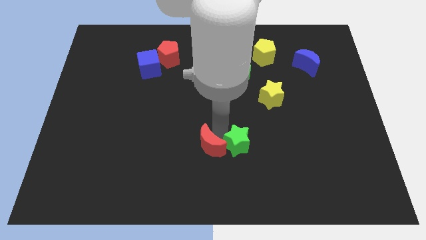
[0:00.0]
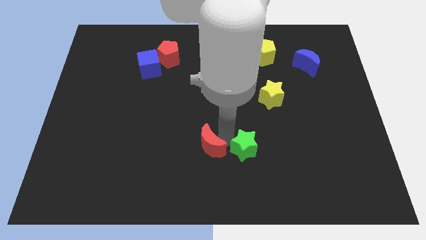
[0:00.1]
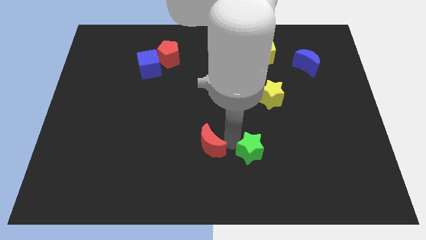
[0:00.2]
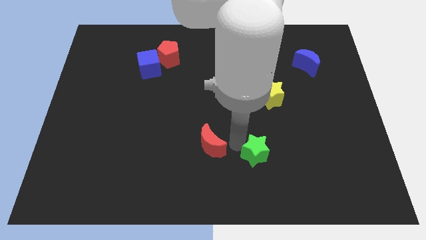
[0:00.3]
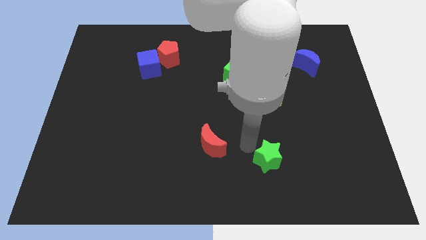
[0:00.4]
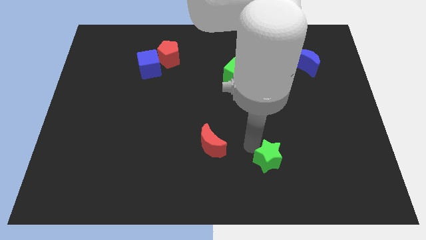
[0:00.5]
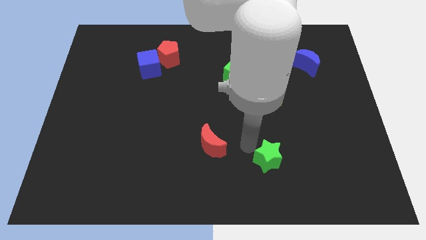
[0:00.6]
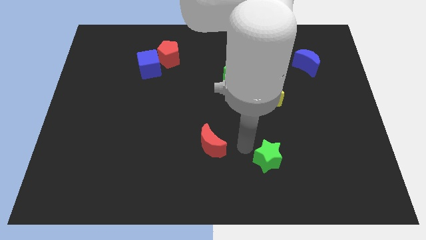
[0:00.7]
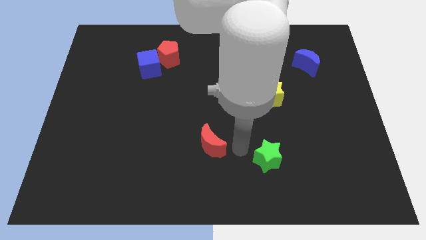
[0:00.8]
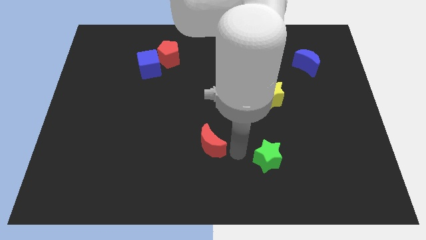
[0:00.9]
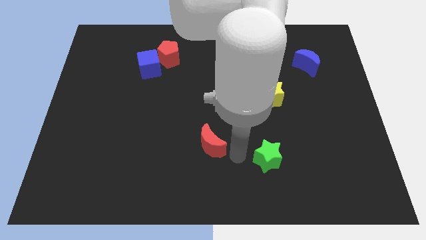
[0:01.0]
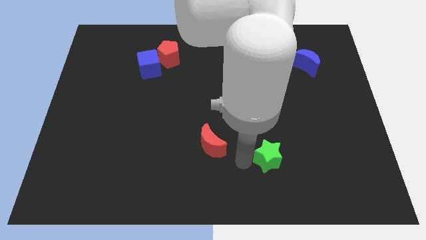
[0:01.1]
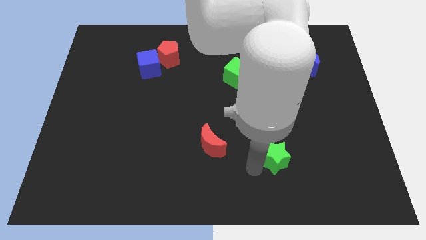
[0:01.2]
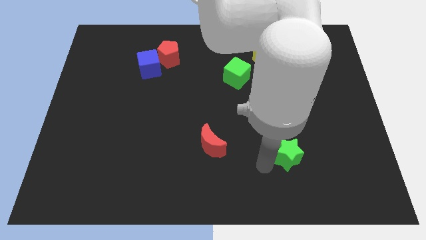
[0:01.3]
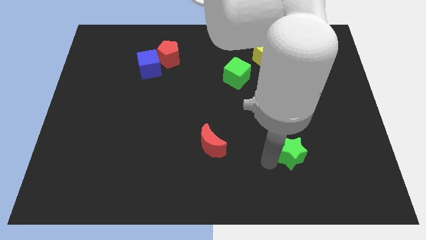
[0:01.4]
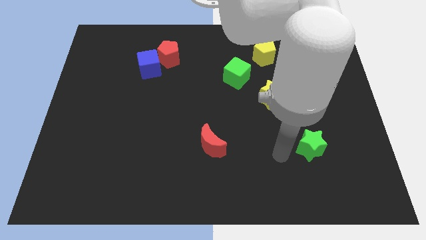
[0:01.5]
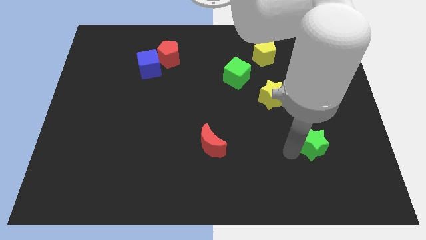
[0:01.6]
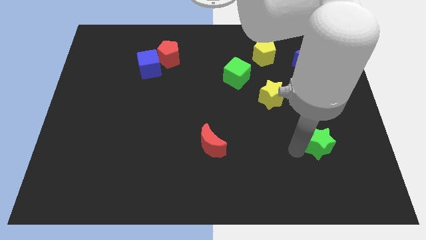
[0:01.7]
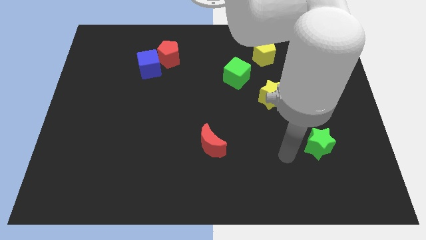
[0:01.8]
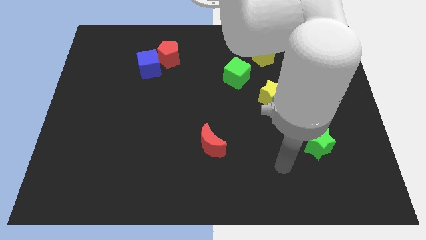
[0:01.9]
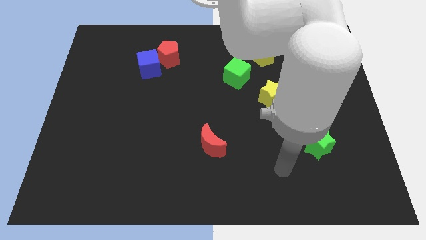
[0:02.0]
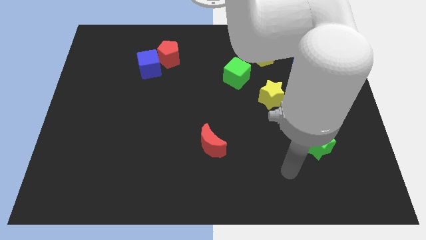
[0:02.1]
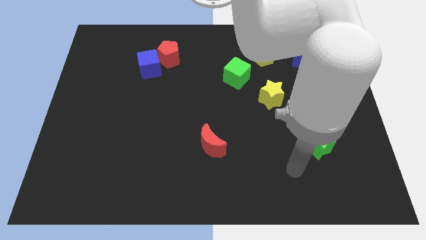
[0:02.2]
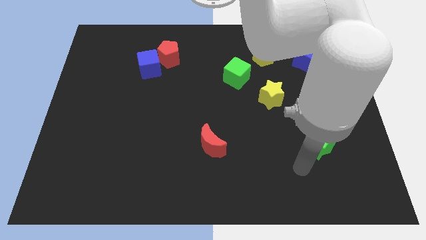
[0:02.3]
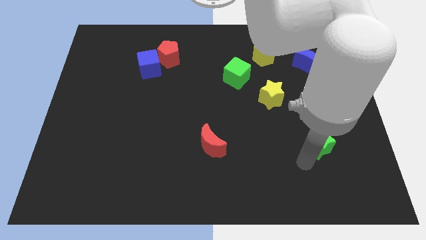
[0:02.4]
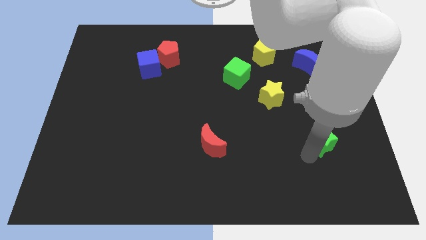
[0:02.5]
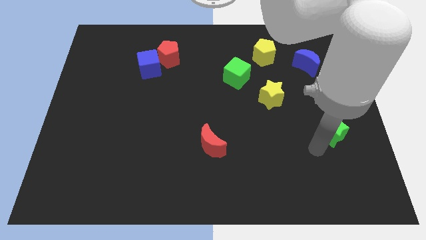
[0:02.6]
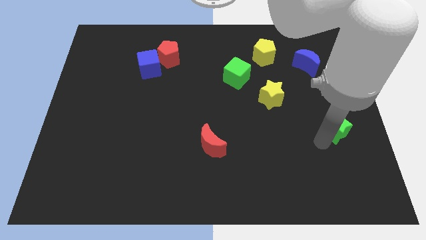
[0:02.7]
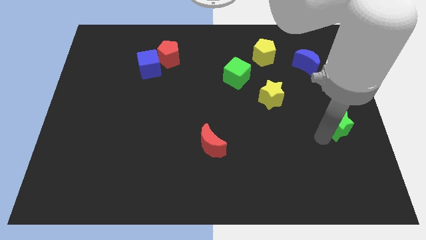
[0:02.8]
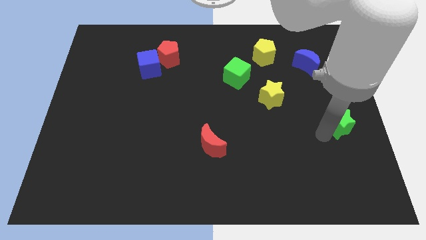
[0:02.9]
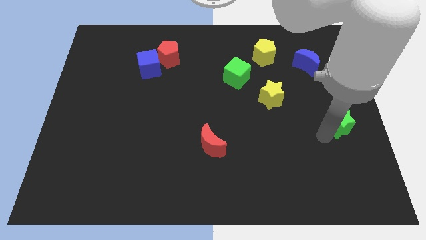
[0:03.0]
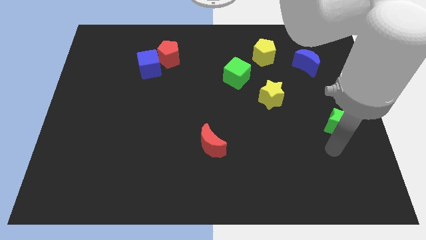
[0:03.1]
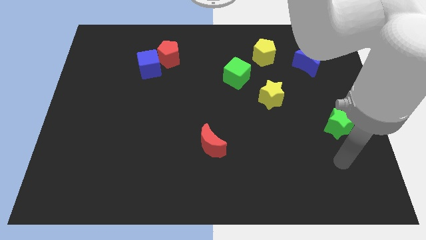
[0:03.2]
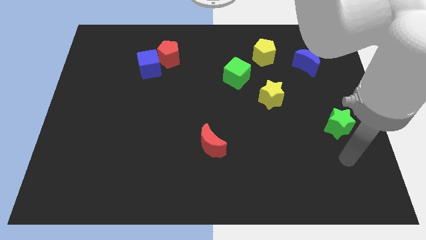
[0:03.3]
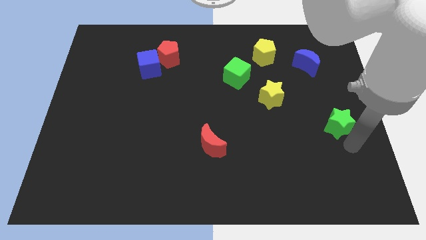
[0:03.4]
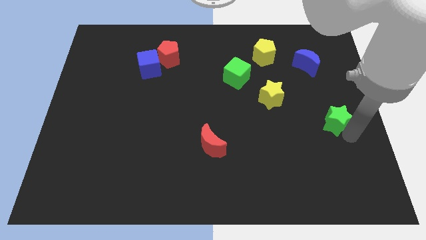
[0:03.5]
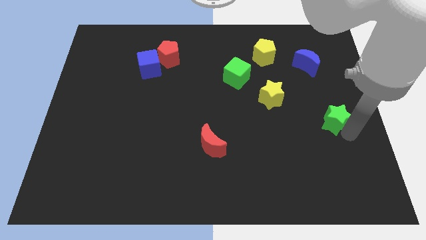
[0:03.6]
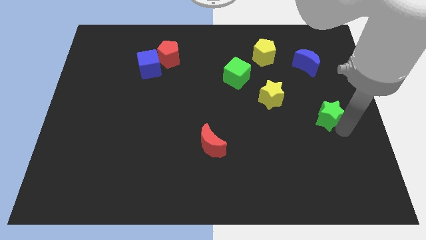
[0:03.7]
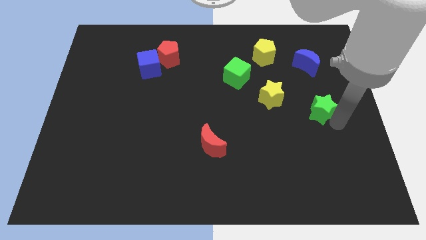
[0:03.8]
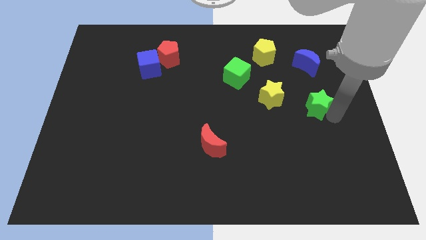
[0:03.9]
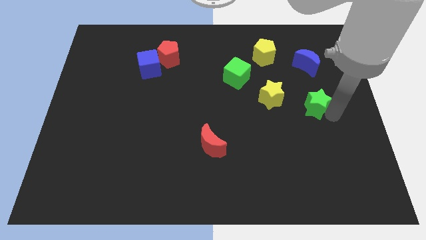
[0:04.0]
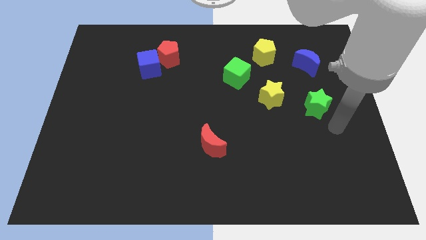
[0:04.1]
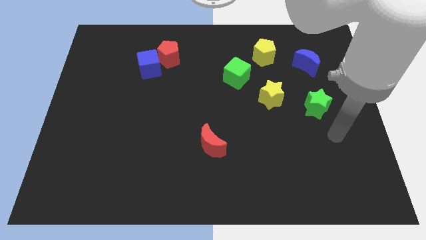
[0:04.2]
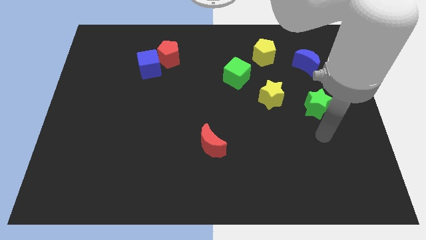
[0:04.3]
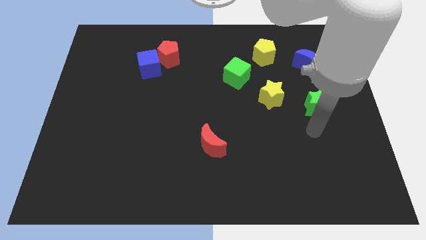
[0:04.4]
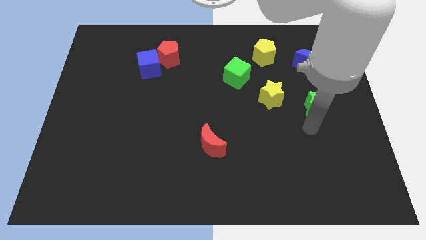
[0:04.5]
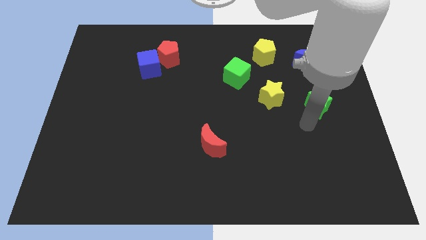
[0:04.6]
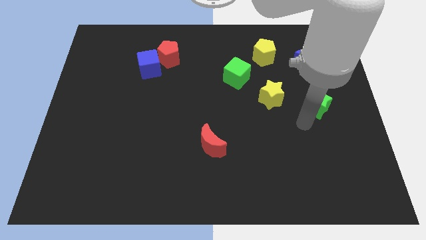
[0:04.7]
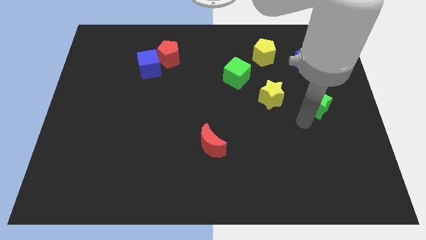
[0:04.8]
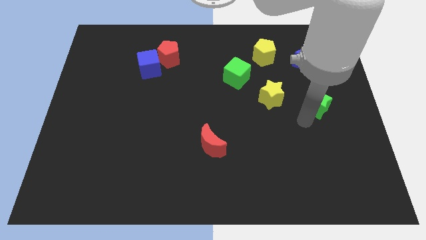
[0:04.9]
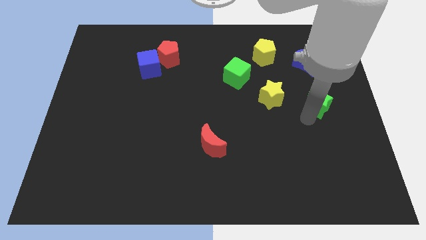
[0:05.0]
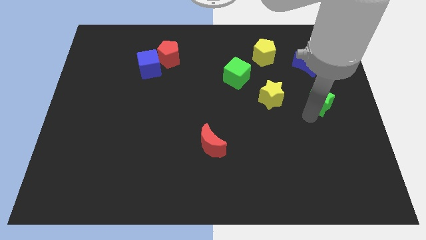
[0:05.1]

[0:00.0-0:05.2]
place the green star below the blue moon

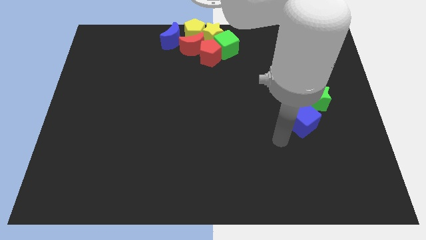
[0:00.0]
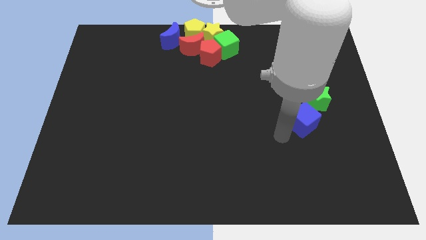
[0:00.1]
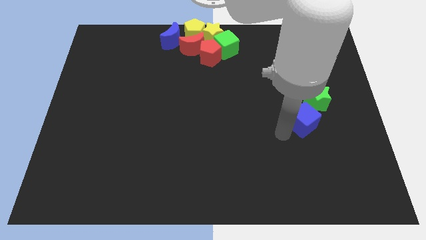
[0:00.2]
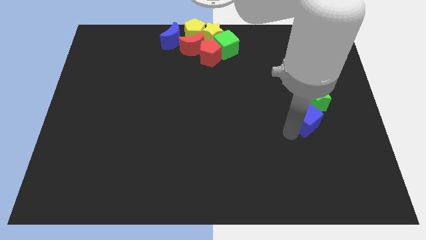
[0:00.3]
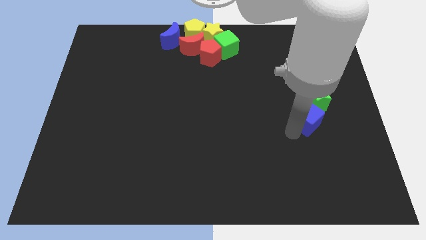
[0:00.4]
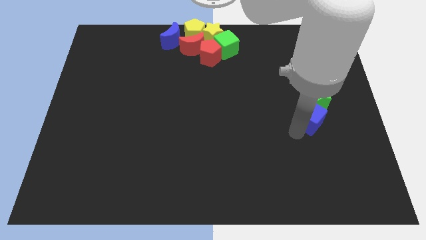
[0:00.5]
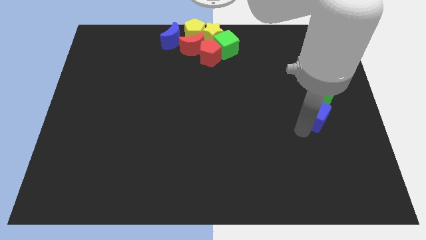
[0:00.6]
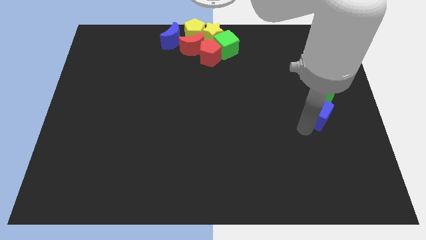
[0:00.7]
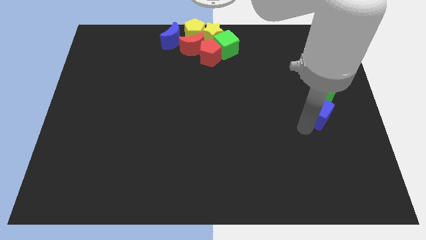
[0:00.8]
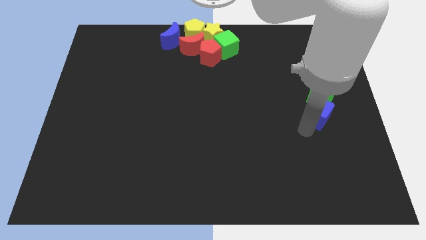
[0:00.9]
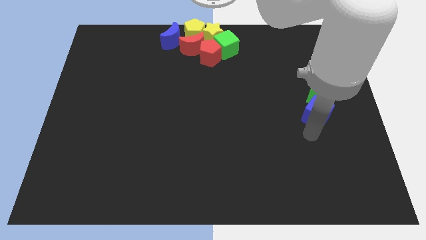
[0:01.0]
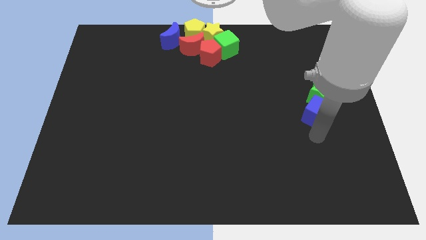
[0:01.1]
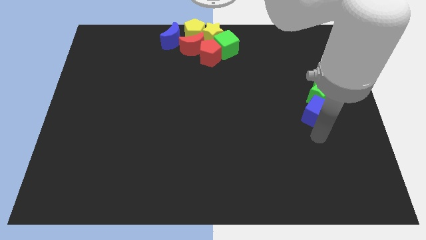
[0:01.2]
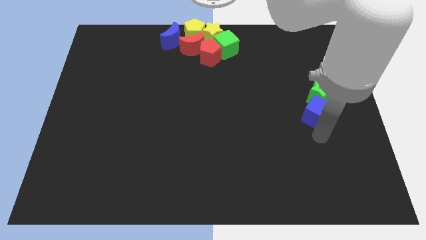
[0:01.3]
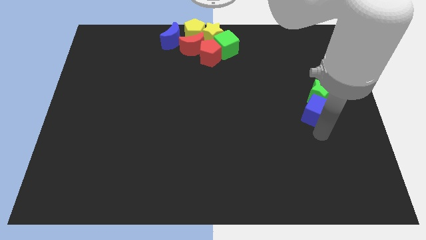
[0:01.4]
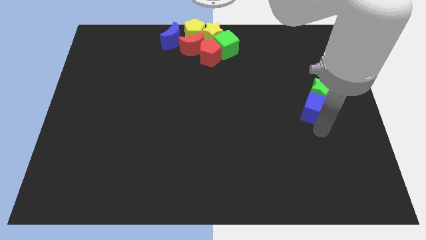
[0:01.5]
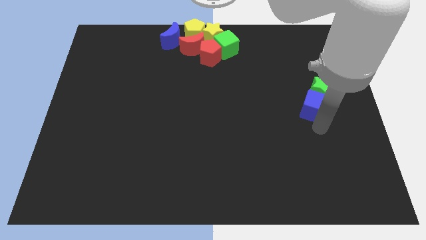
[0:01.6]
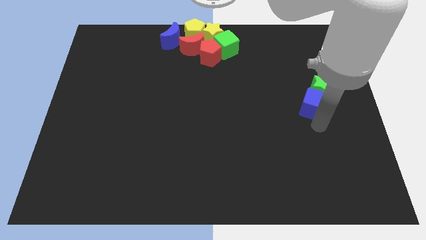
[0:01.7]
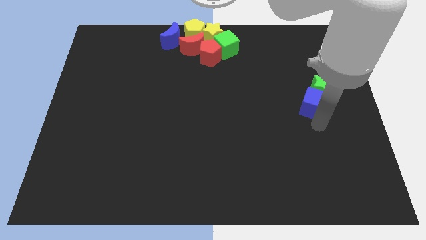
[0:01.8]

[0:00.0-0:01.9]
move blue cube into green star

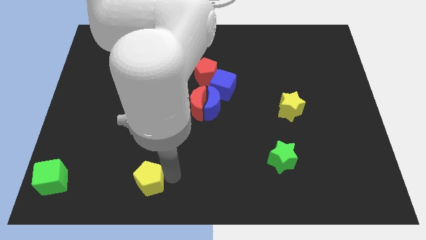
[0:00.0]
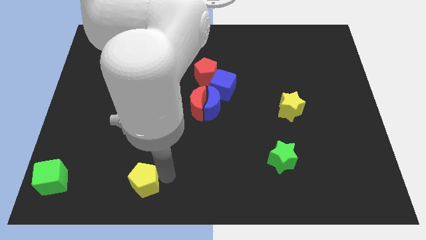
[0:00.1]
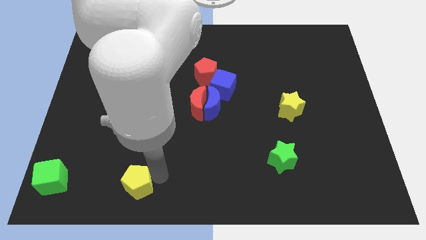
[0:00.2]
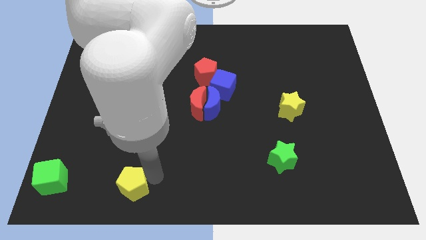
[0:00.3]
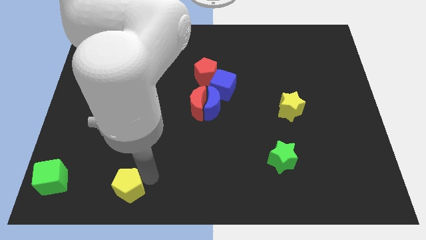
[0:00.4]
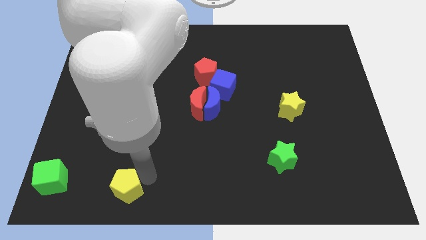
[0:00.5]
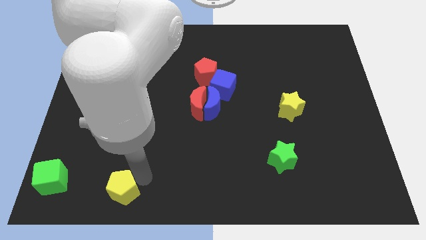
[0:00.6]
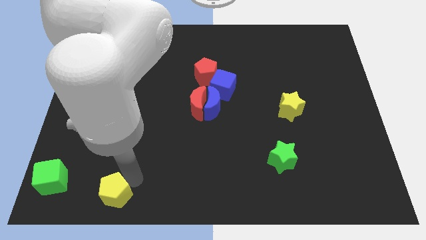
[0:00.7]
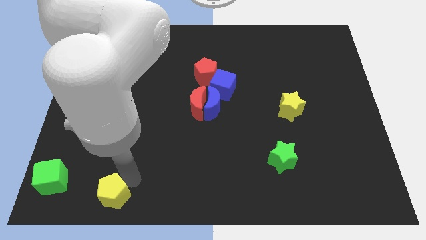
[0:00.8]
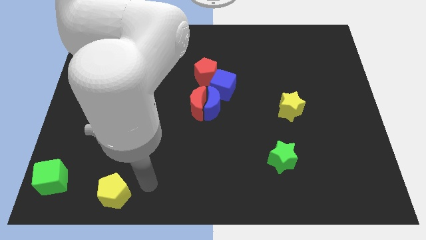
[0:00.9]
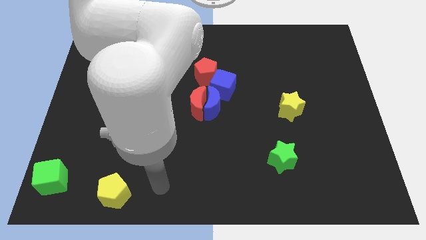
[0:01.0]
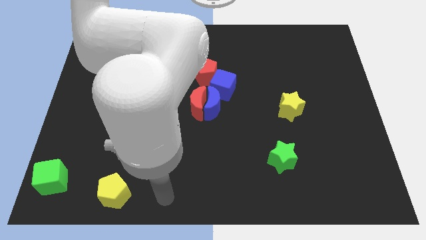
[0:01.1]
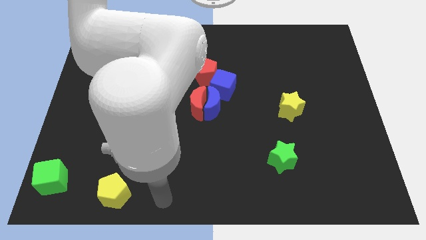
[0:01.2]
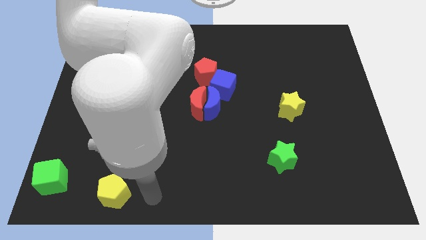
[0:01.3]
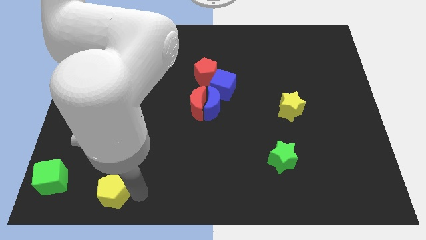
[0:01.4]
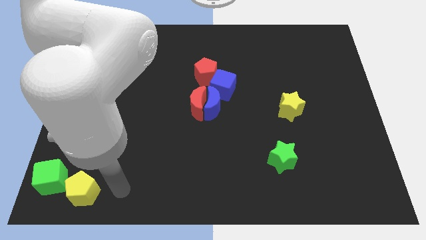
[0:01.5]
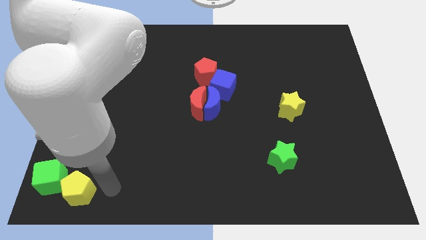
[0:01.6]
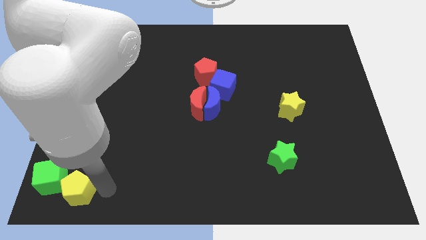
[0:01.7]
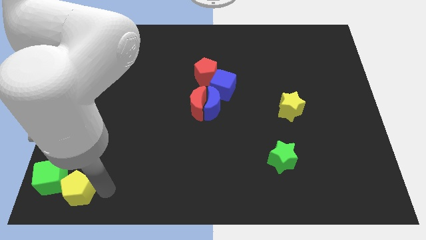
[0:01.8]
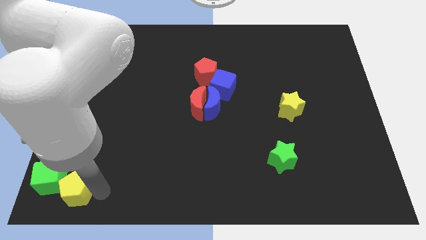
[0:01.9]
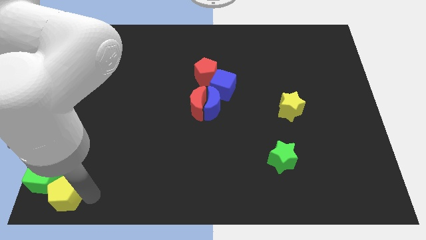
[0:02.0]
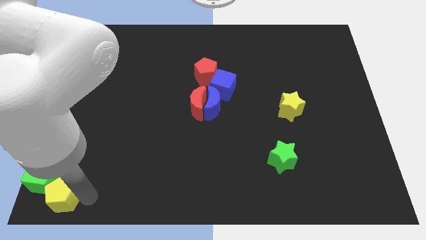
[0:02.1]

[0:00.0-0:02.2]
push the yellow pentagon into the green cube
